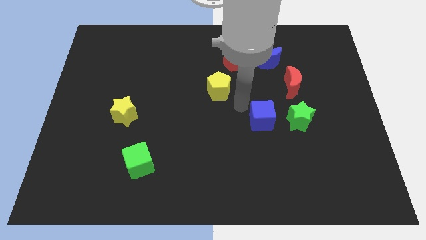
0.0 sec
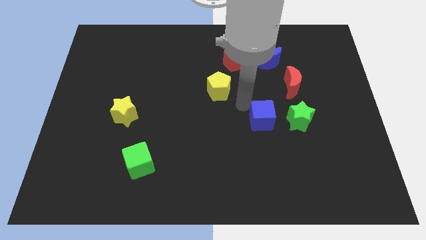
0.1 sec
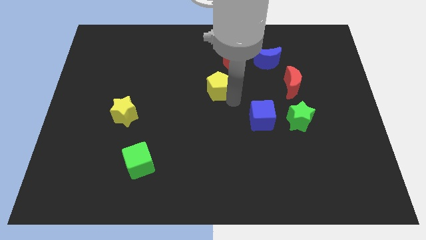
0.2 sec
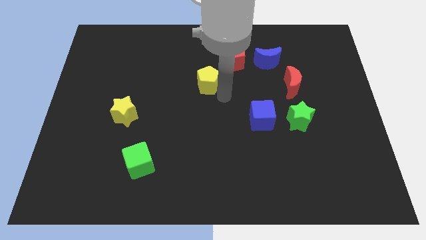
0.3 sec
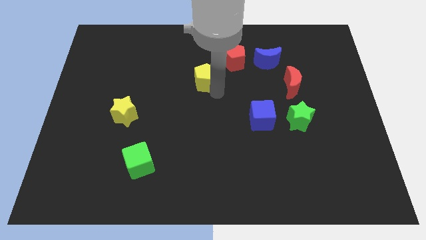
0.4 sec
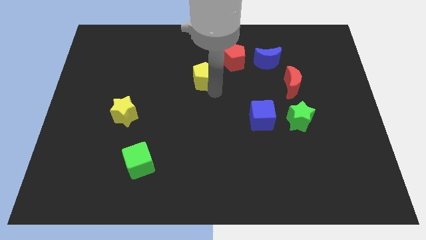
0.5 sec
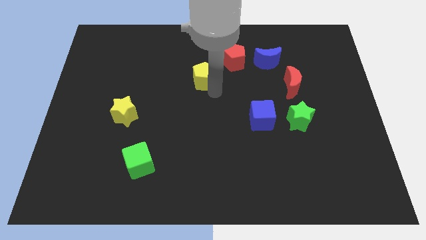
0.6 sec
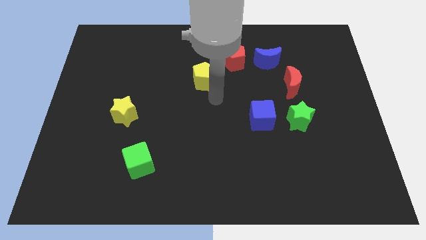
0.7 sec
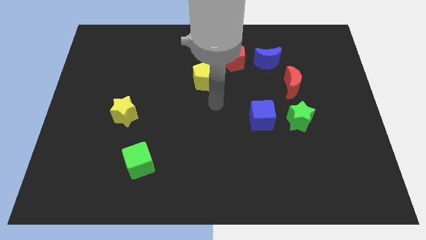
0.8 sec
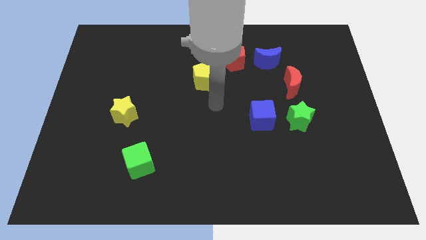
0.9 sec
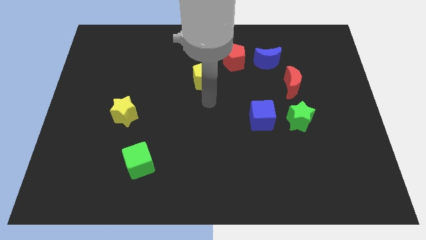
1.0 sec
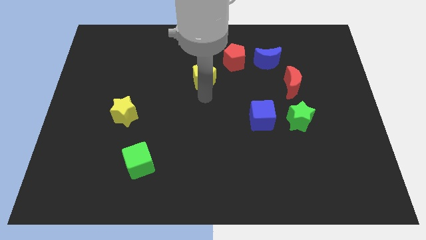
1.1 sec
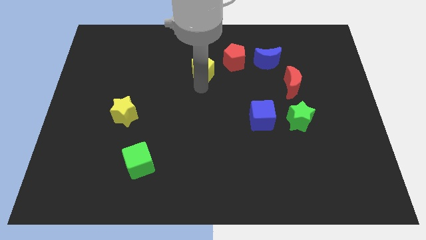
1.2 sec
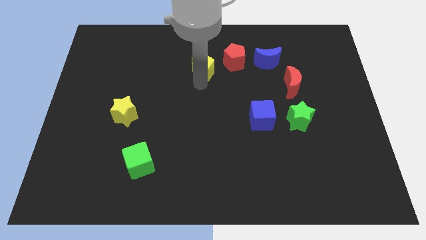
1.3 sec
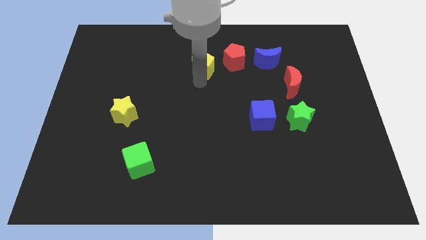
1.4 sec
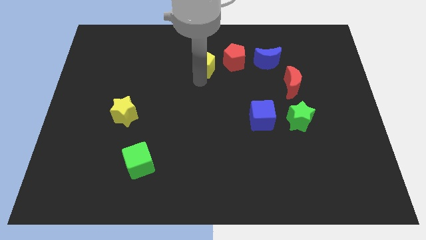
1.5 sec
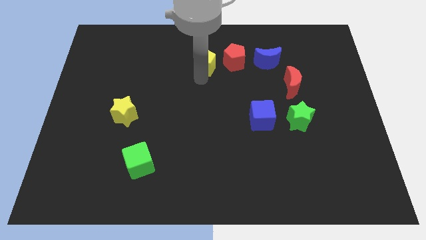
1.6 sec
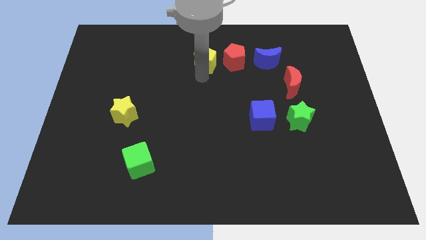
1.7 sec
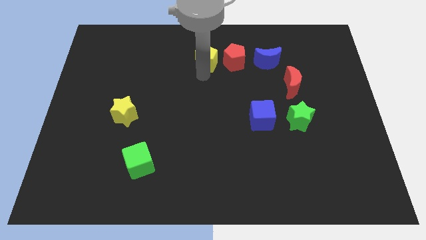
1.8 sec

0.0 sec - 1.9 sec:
move yellow pentagon left the red pentagon

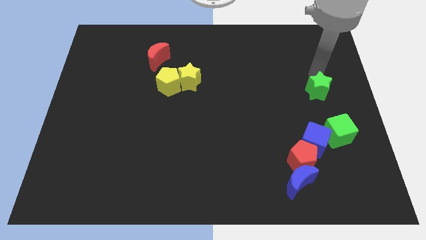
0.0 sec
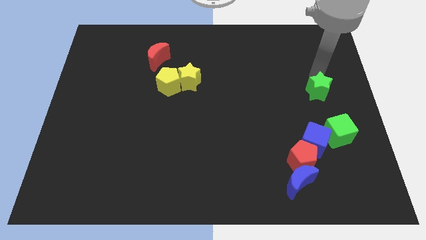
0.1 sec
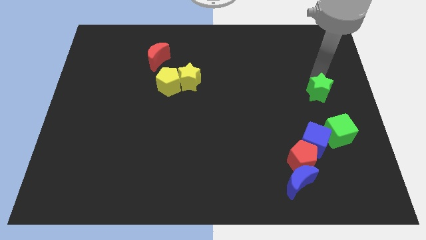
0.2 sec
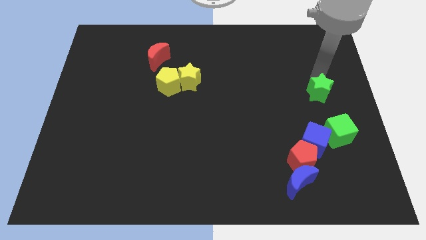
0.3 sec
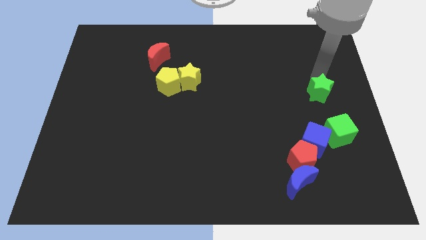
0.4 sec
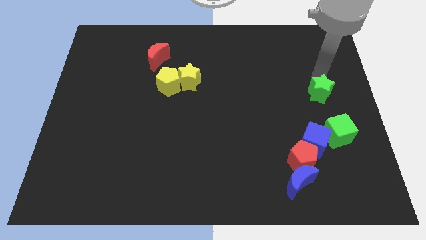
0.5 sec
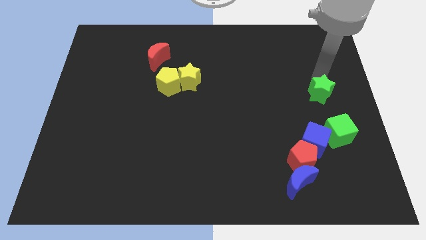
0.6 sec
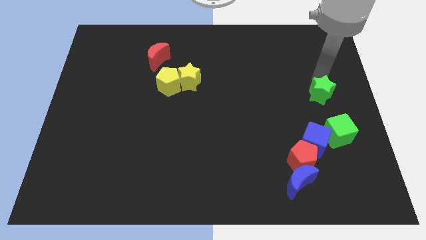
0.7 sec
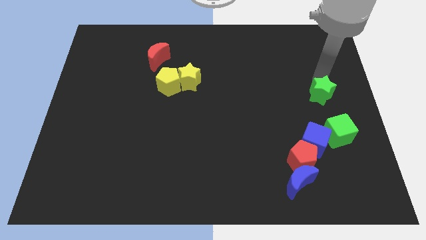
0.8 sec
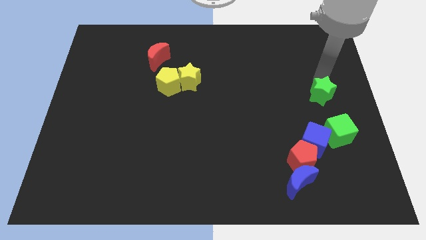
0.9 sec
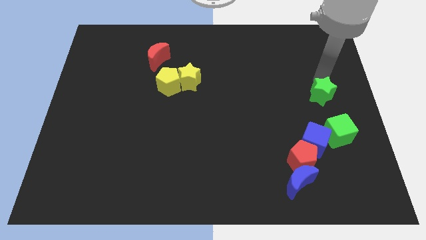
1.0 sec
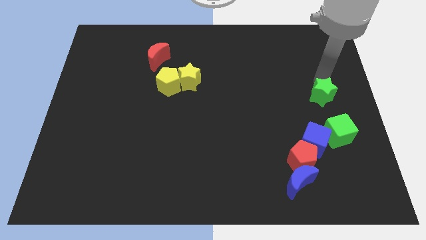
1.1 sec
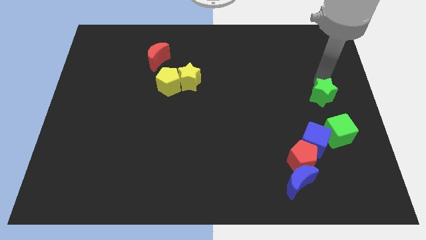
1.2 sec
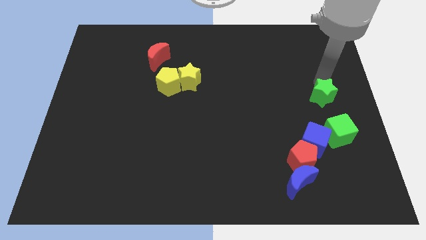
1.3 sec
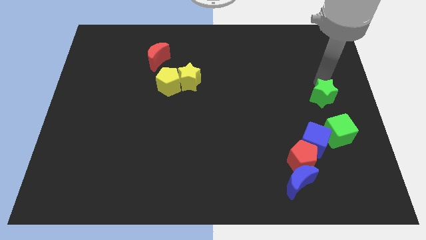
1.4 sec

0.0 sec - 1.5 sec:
push the green star towards the green cube

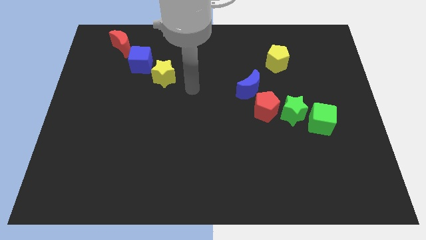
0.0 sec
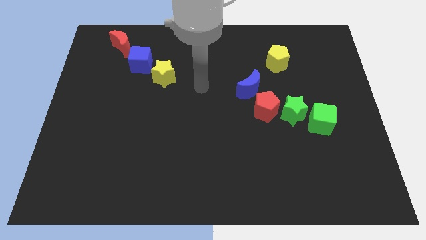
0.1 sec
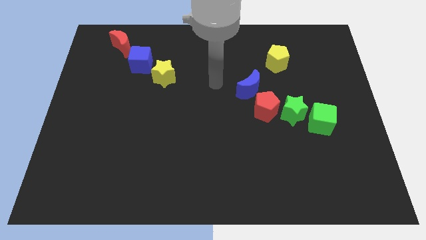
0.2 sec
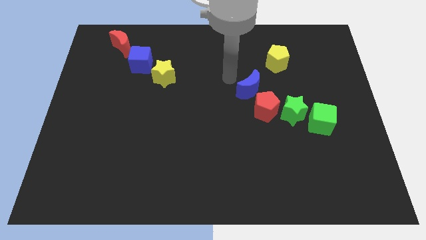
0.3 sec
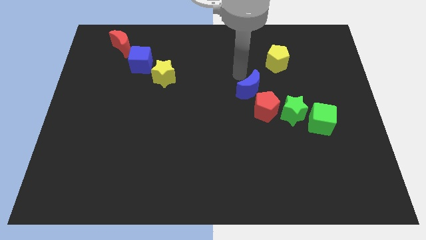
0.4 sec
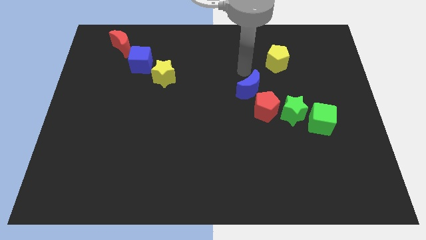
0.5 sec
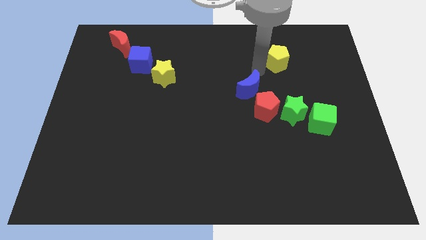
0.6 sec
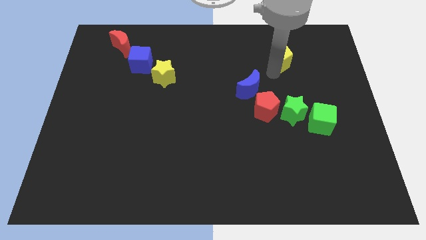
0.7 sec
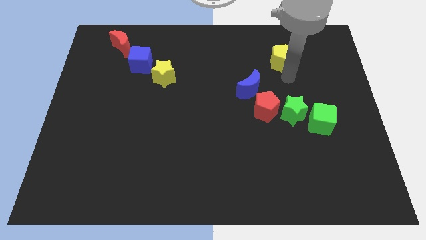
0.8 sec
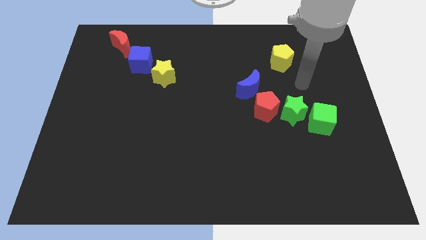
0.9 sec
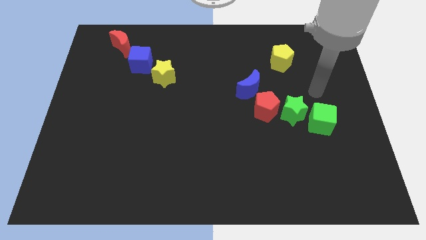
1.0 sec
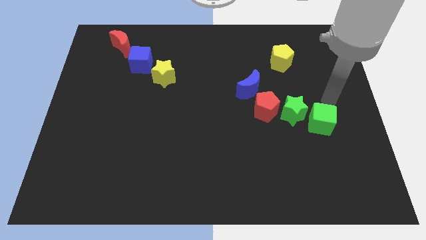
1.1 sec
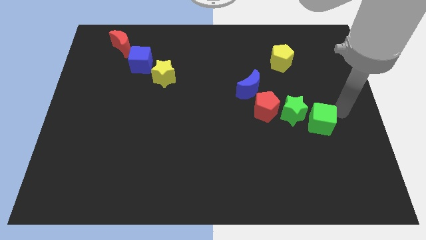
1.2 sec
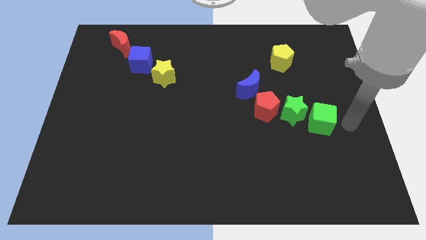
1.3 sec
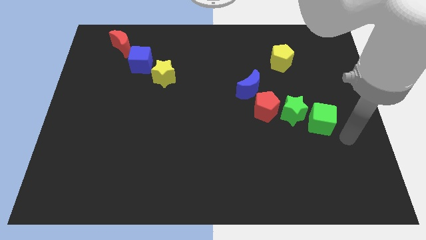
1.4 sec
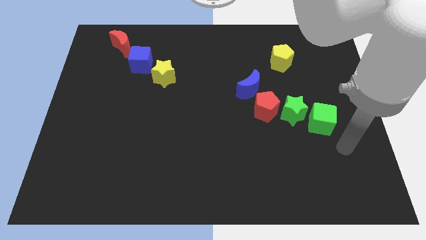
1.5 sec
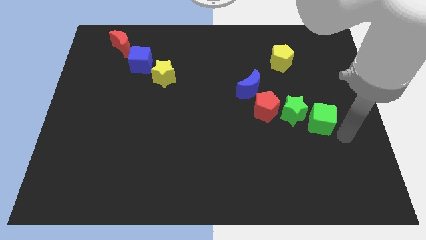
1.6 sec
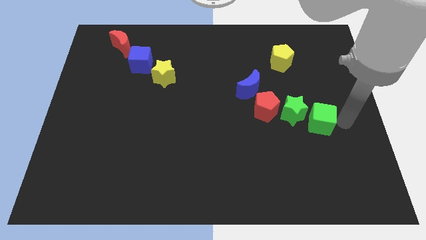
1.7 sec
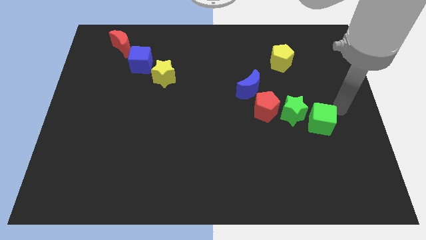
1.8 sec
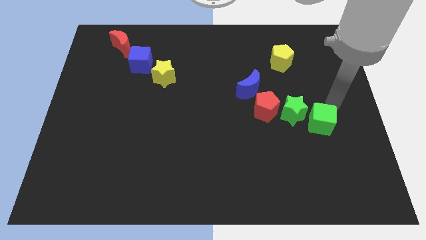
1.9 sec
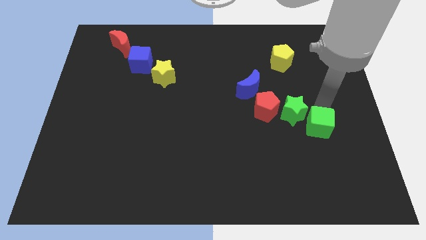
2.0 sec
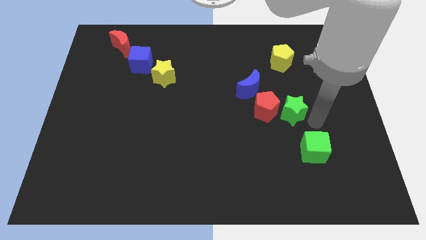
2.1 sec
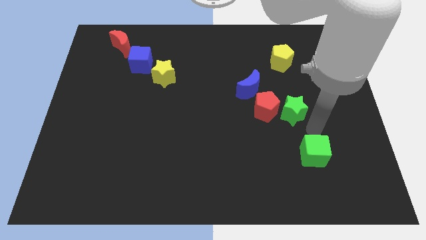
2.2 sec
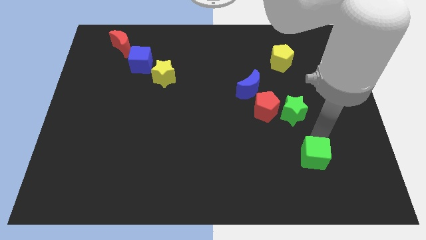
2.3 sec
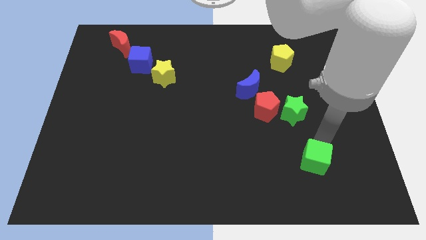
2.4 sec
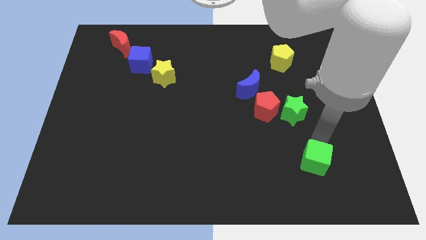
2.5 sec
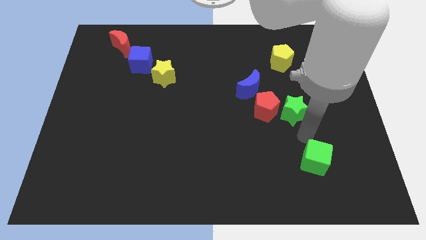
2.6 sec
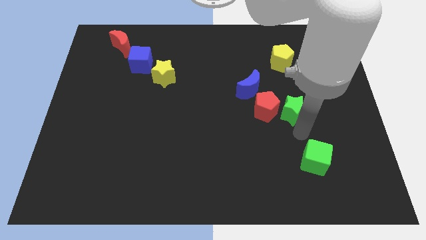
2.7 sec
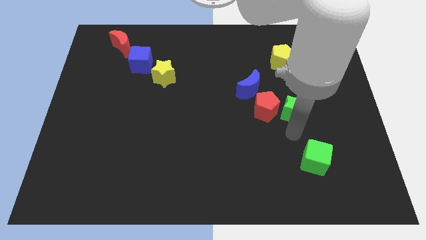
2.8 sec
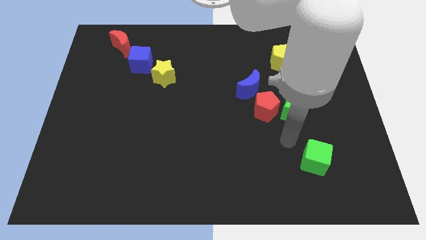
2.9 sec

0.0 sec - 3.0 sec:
push the green cube downward

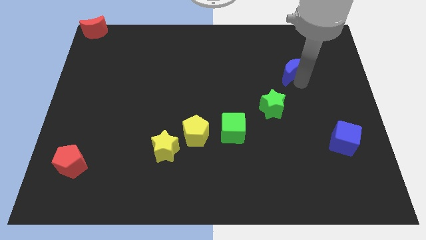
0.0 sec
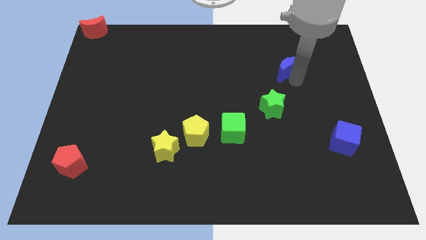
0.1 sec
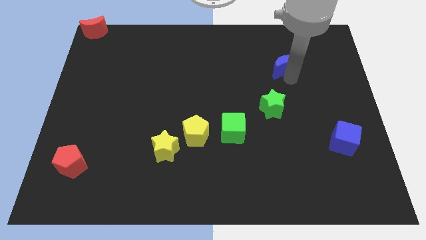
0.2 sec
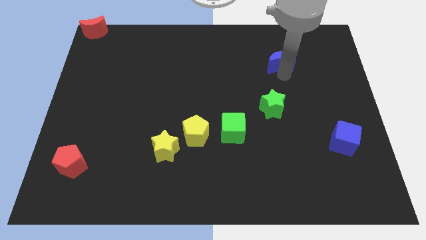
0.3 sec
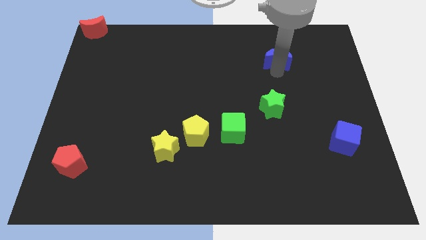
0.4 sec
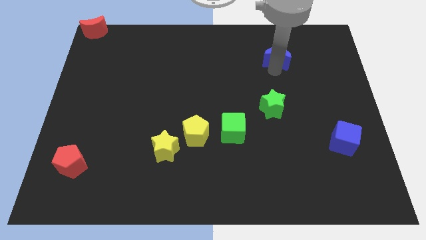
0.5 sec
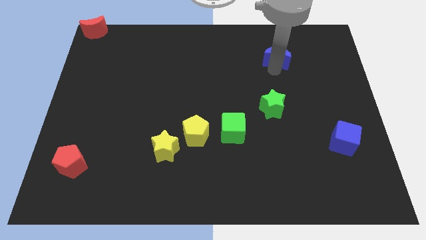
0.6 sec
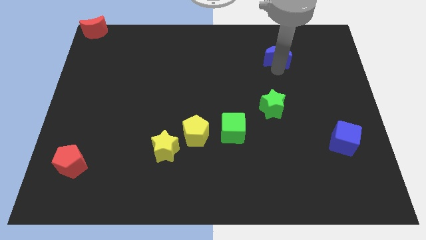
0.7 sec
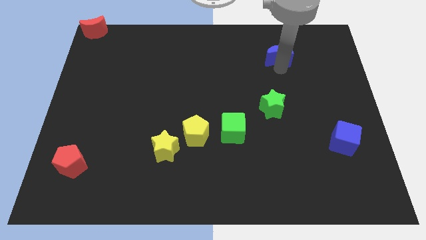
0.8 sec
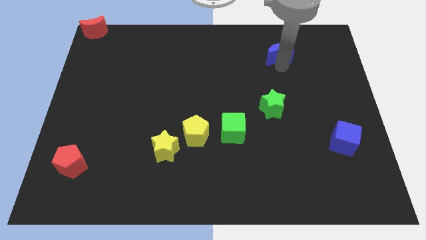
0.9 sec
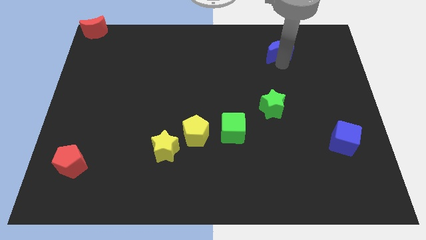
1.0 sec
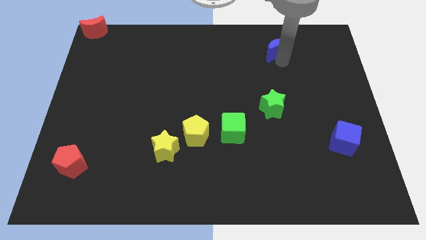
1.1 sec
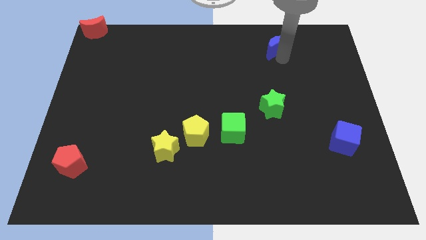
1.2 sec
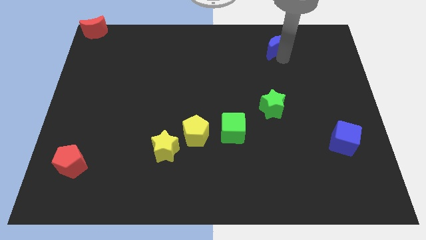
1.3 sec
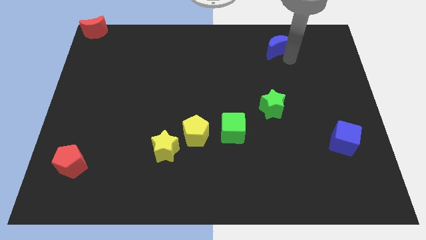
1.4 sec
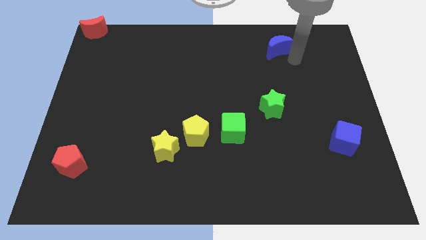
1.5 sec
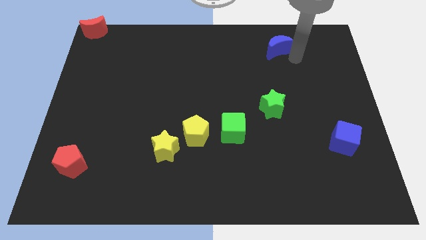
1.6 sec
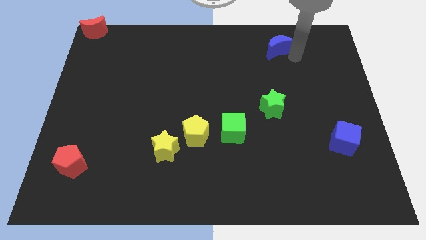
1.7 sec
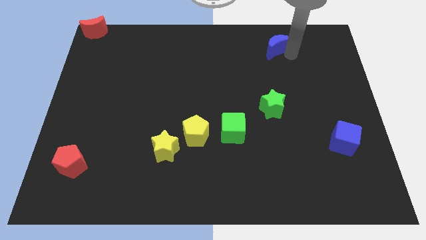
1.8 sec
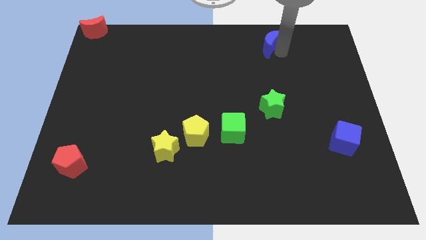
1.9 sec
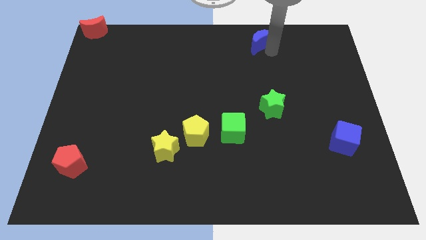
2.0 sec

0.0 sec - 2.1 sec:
place the blue crescent vertically above the green star

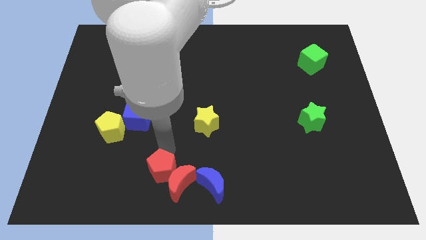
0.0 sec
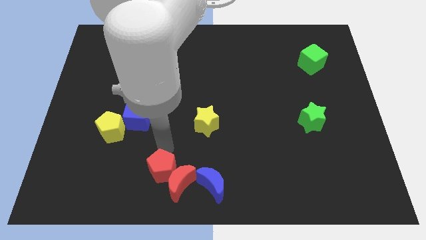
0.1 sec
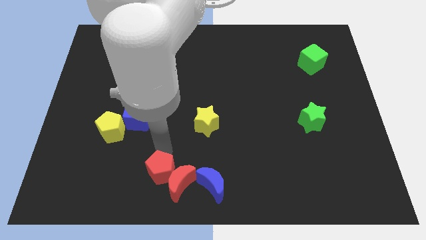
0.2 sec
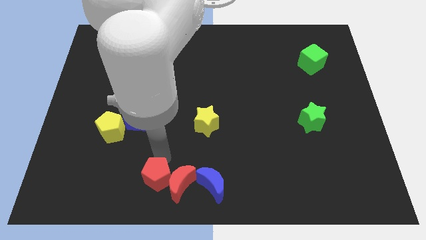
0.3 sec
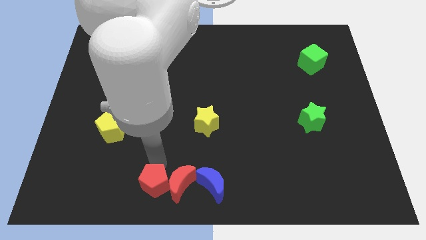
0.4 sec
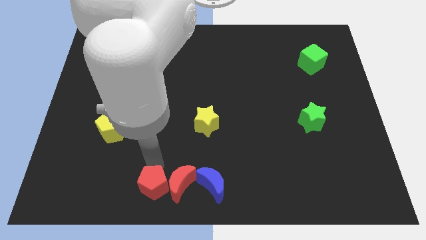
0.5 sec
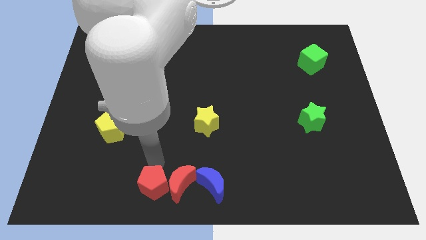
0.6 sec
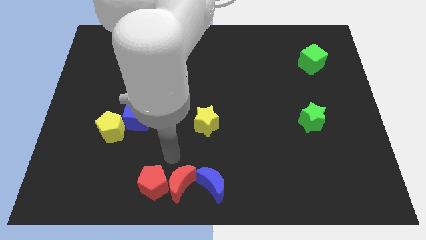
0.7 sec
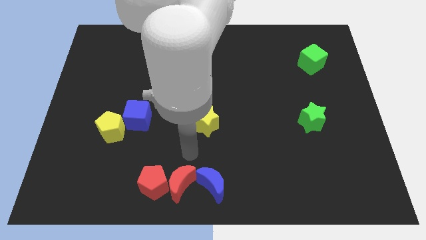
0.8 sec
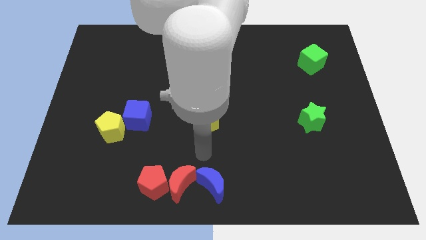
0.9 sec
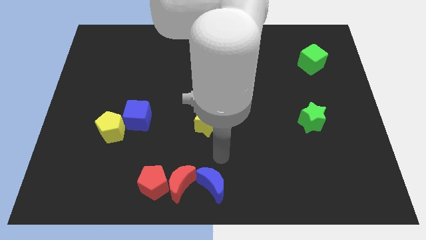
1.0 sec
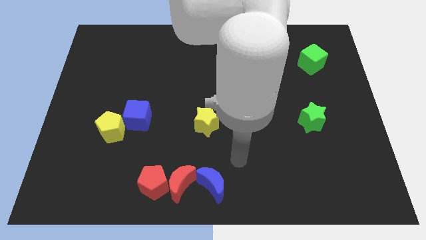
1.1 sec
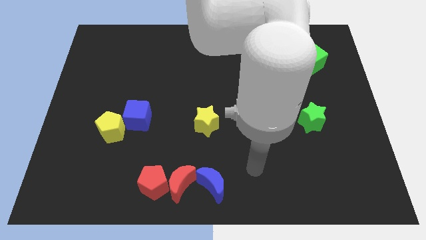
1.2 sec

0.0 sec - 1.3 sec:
place the red pentagon left to the red moon
